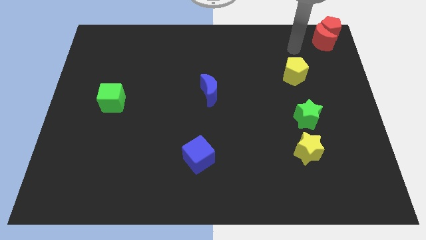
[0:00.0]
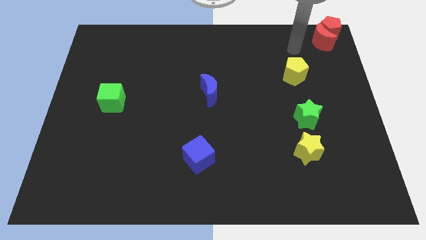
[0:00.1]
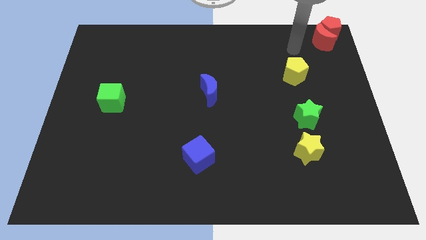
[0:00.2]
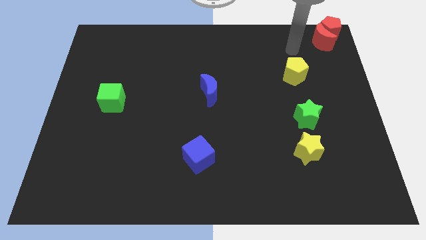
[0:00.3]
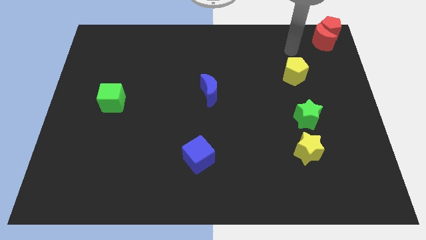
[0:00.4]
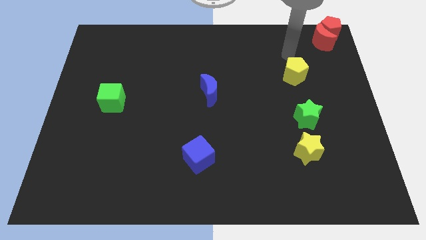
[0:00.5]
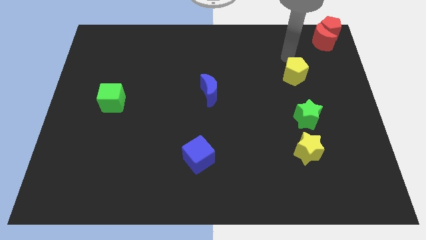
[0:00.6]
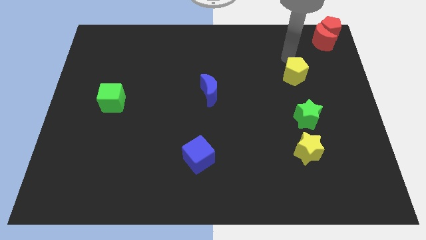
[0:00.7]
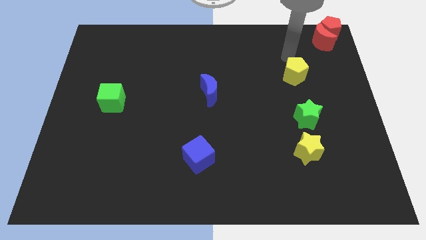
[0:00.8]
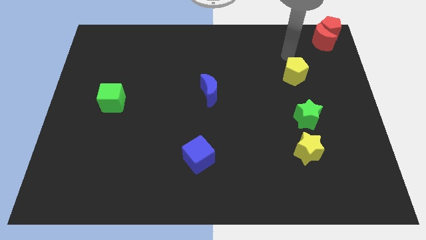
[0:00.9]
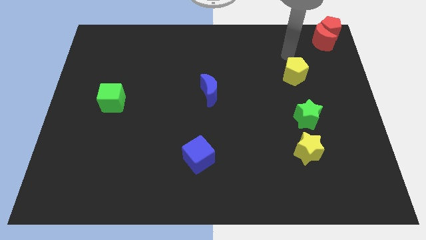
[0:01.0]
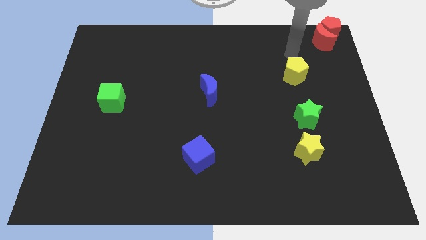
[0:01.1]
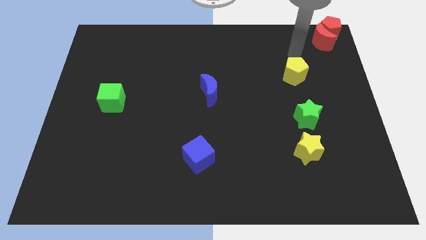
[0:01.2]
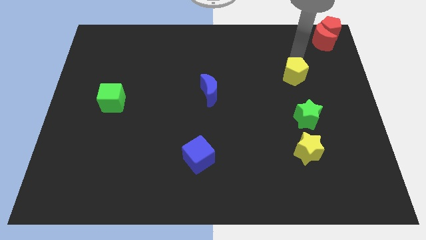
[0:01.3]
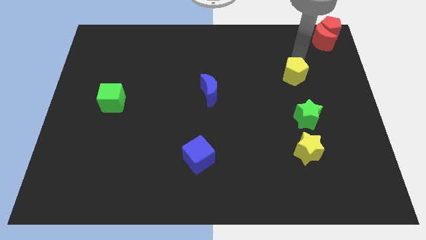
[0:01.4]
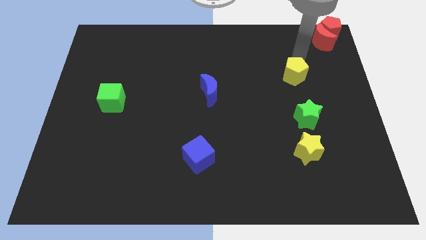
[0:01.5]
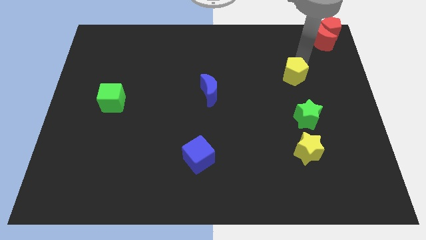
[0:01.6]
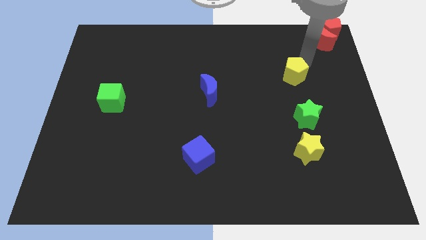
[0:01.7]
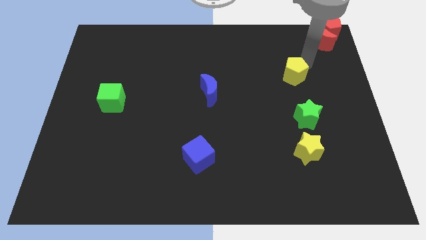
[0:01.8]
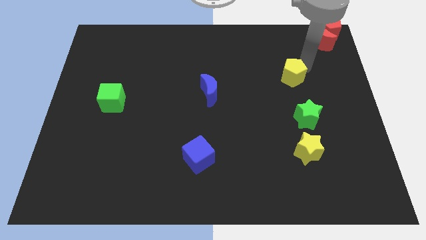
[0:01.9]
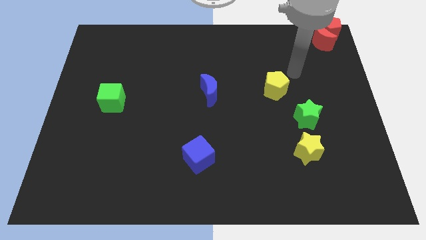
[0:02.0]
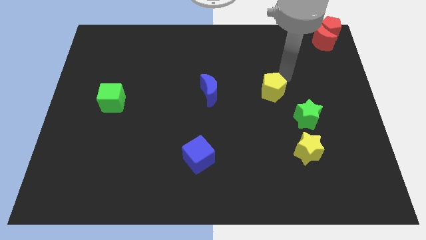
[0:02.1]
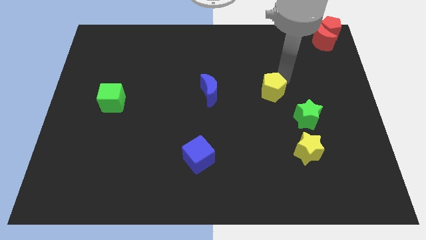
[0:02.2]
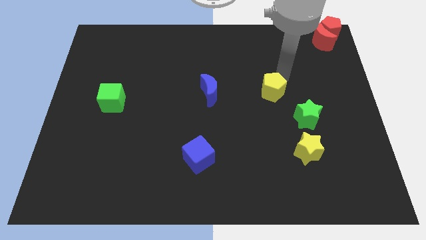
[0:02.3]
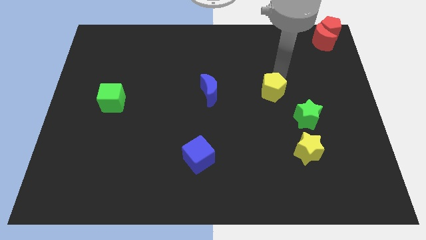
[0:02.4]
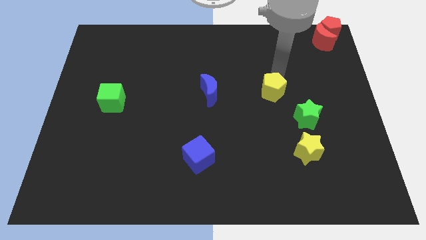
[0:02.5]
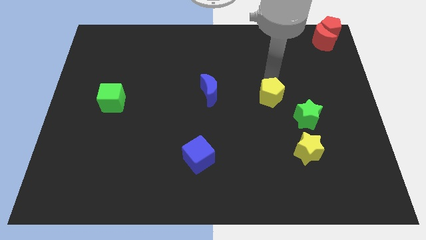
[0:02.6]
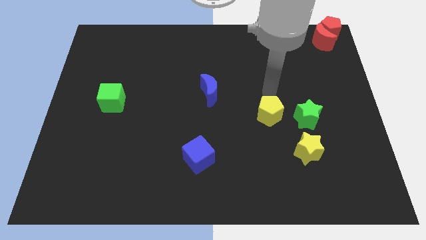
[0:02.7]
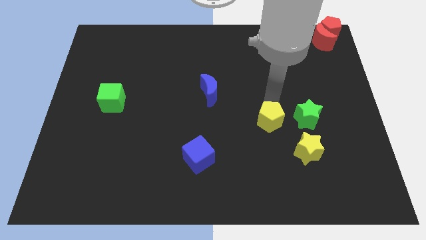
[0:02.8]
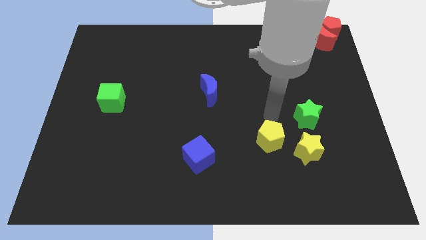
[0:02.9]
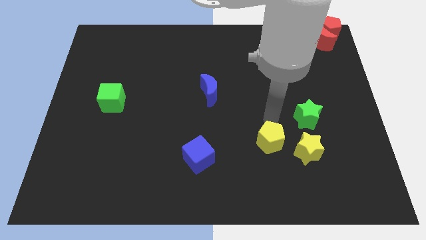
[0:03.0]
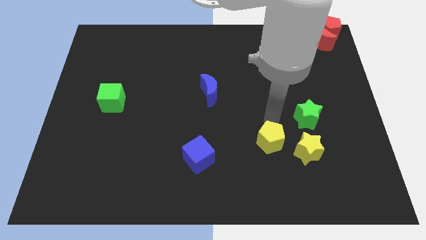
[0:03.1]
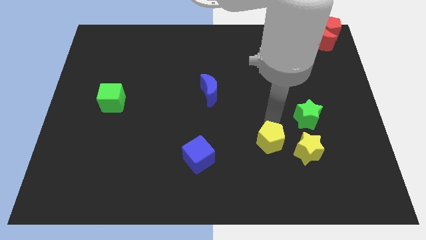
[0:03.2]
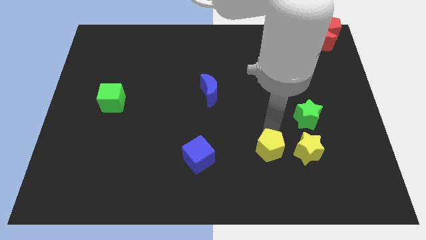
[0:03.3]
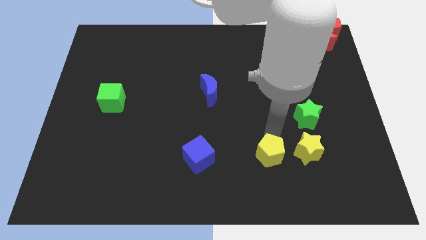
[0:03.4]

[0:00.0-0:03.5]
place the yellow pentagon to the left of the yellow star

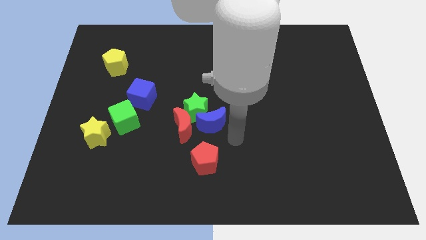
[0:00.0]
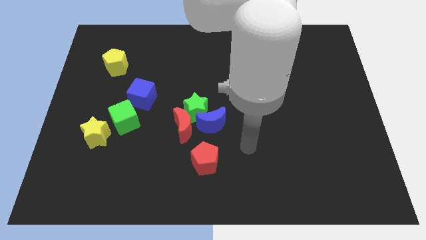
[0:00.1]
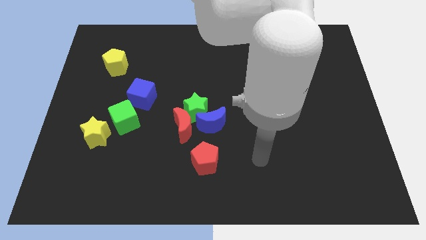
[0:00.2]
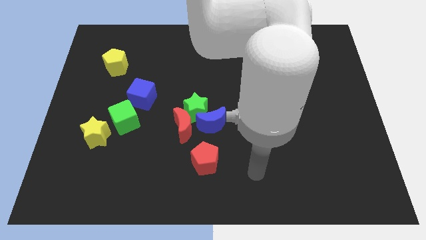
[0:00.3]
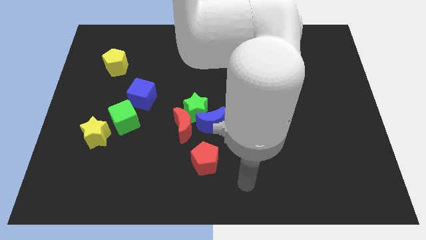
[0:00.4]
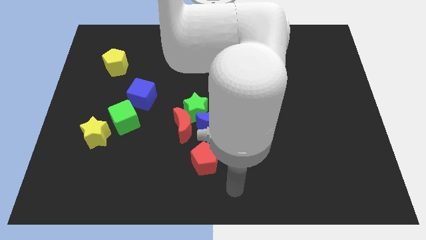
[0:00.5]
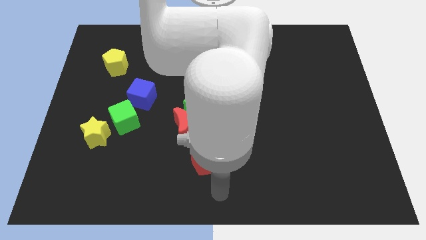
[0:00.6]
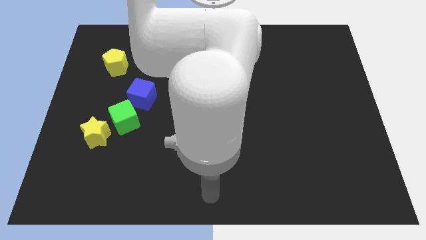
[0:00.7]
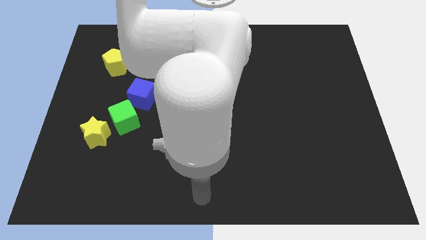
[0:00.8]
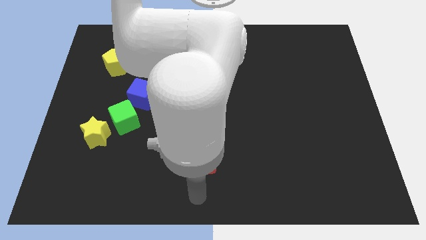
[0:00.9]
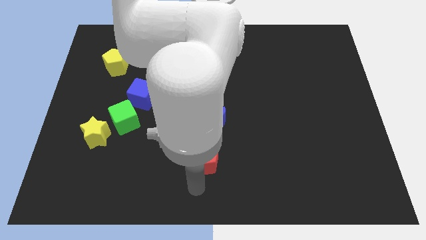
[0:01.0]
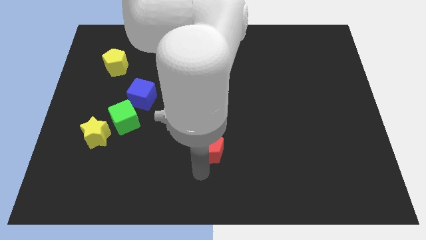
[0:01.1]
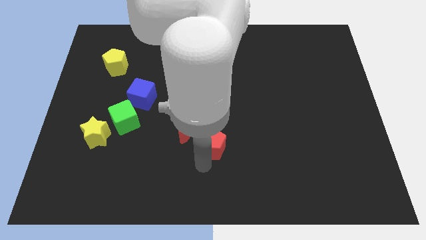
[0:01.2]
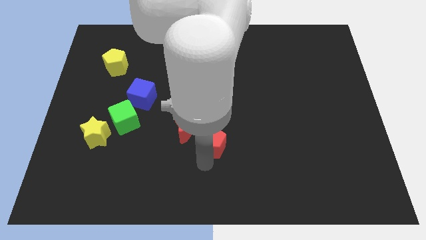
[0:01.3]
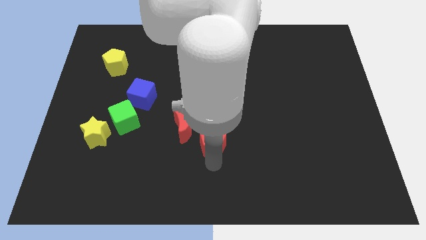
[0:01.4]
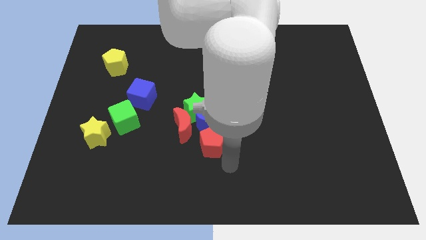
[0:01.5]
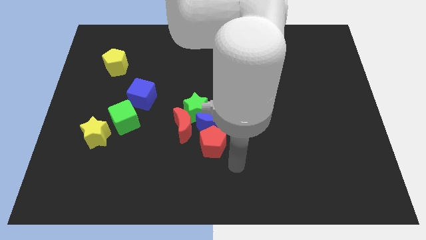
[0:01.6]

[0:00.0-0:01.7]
bring the red pentagon at the bottom side of the blue crescent

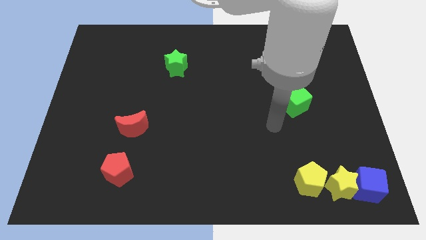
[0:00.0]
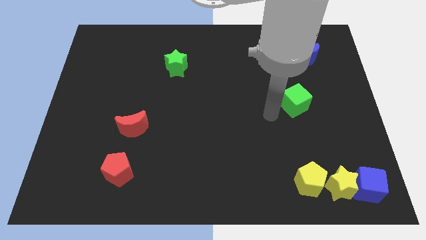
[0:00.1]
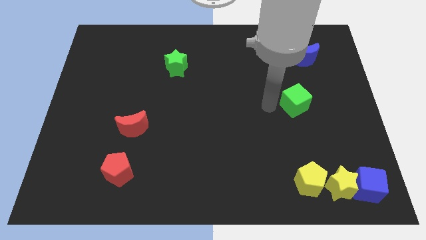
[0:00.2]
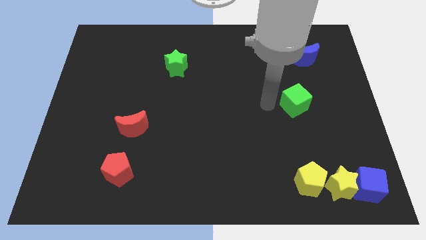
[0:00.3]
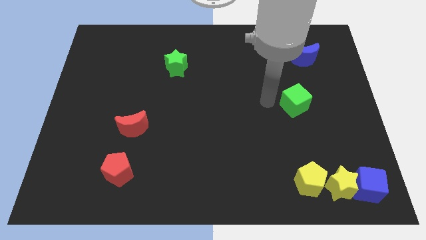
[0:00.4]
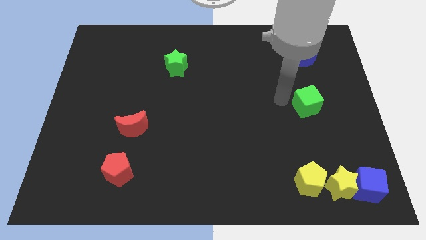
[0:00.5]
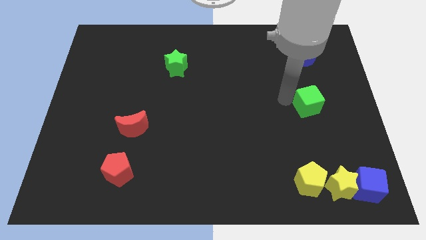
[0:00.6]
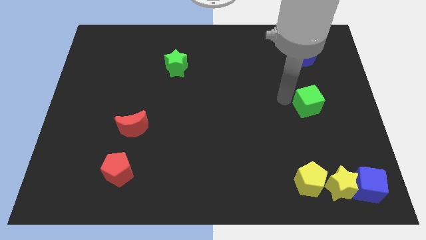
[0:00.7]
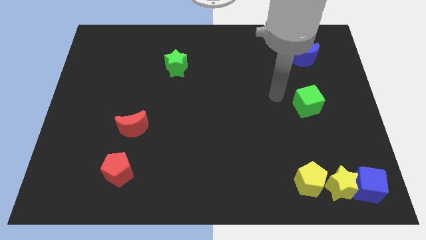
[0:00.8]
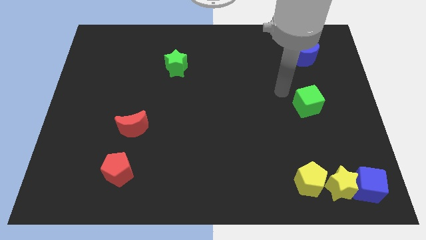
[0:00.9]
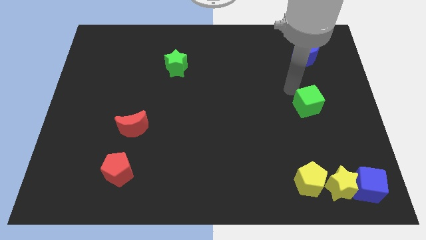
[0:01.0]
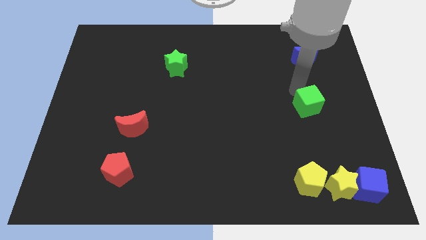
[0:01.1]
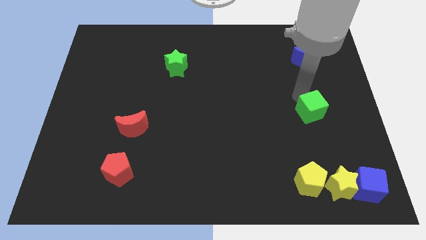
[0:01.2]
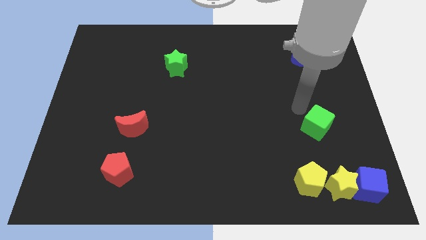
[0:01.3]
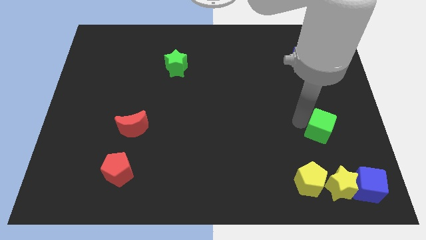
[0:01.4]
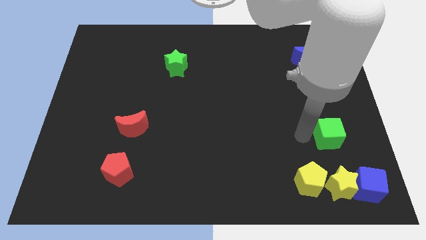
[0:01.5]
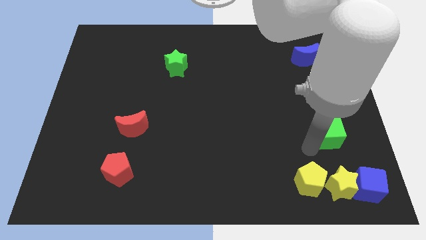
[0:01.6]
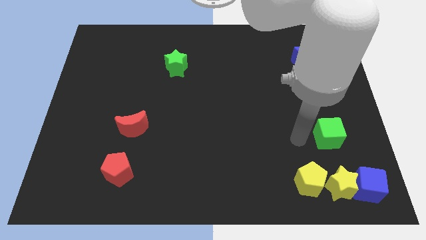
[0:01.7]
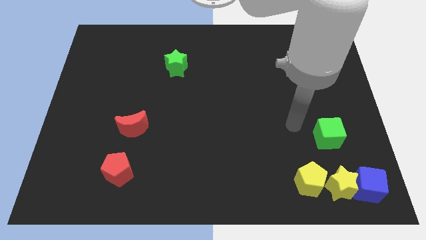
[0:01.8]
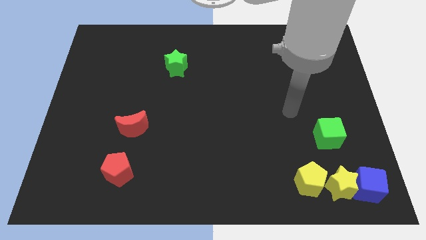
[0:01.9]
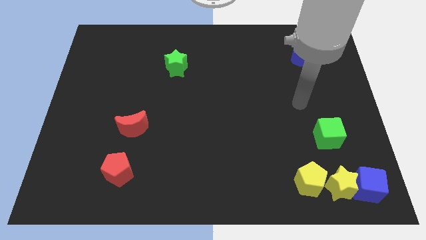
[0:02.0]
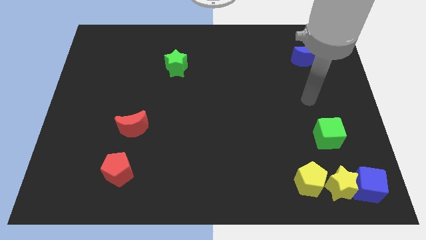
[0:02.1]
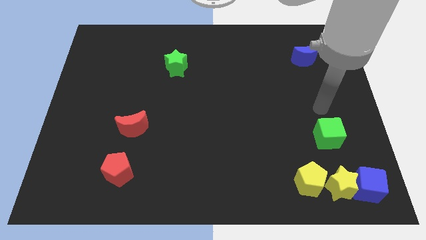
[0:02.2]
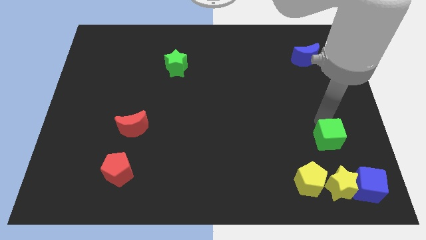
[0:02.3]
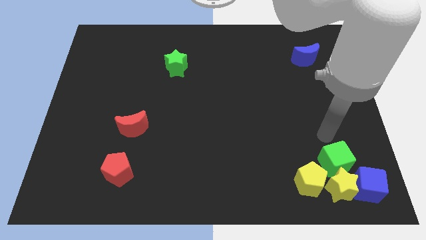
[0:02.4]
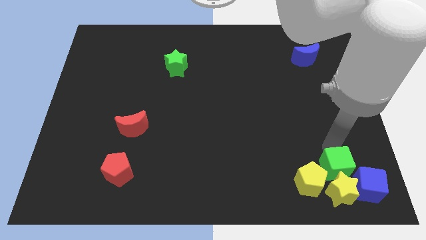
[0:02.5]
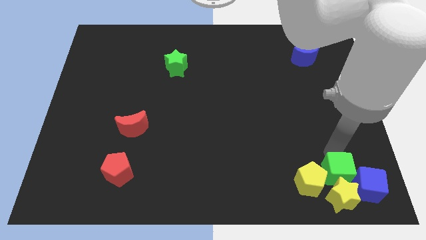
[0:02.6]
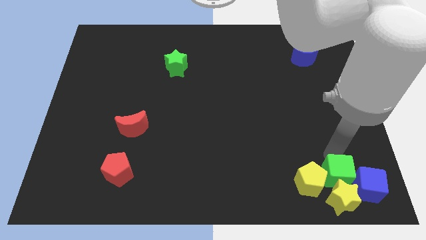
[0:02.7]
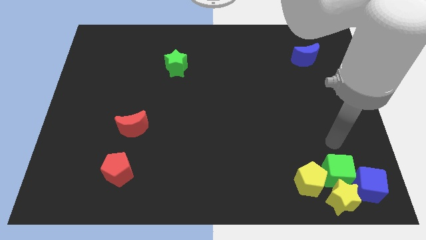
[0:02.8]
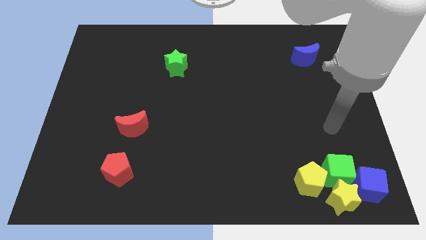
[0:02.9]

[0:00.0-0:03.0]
push the green cube into the top of yellow star

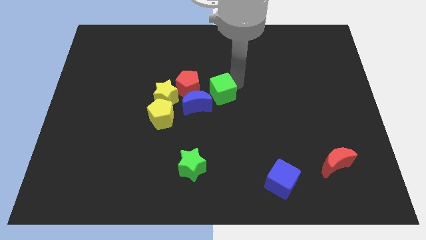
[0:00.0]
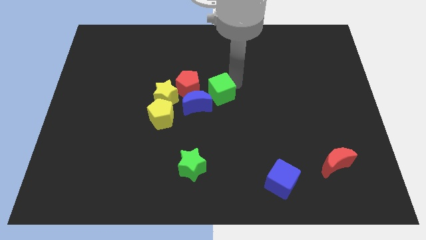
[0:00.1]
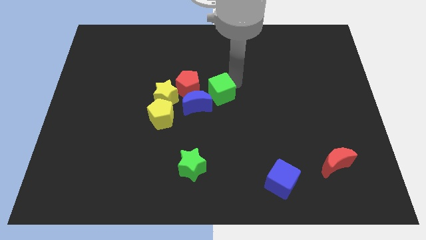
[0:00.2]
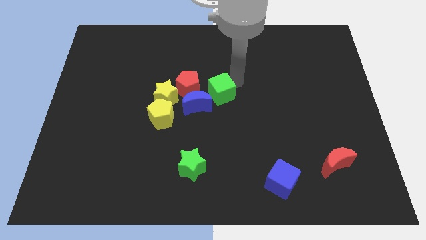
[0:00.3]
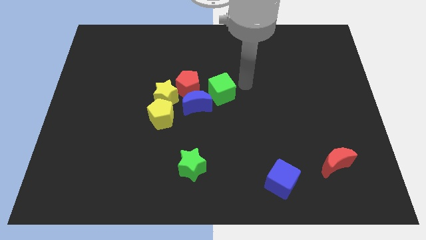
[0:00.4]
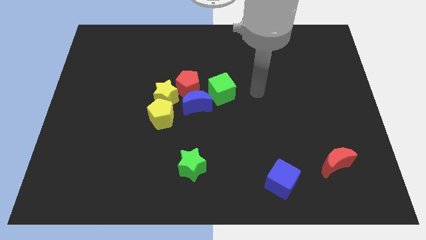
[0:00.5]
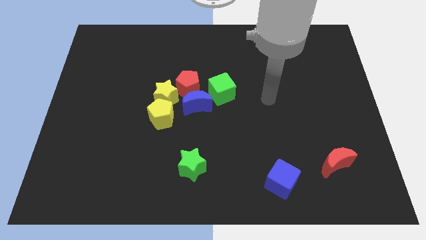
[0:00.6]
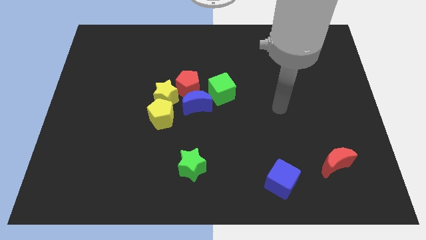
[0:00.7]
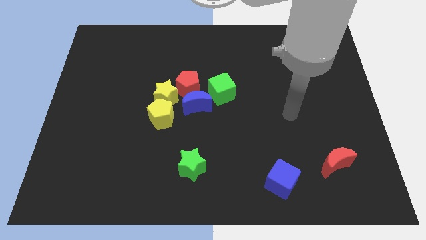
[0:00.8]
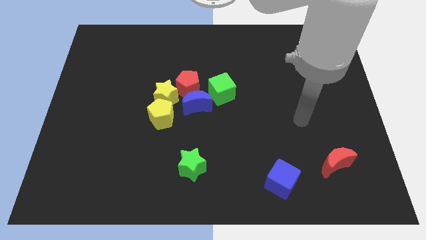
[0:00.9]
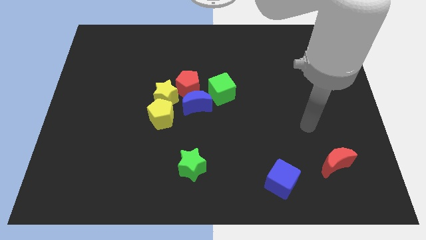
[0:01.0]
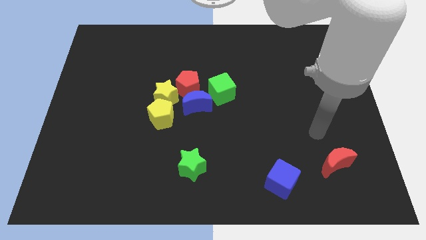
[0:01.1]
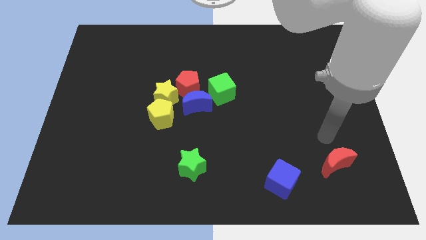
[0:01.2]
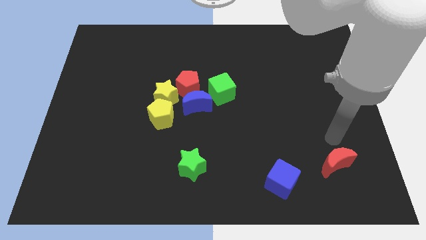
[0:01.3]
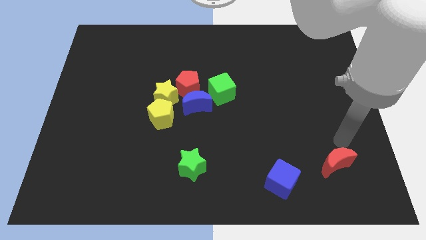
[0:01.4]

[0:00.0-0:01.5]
move your arm above the red moon
